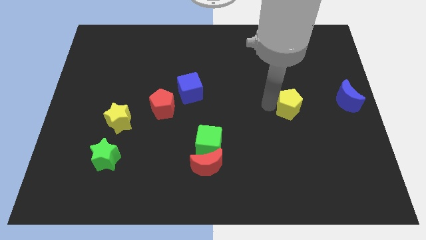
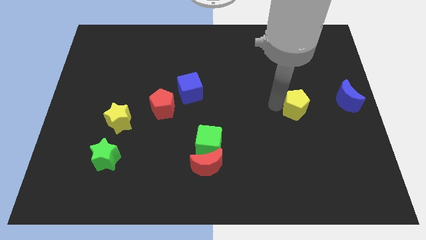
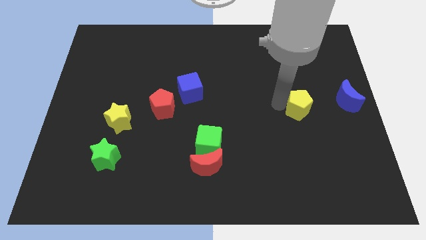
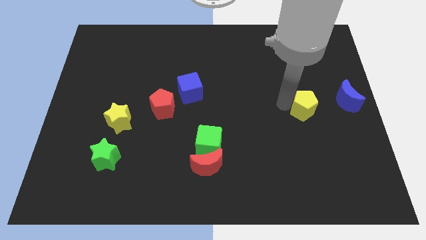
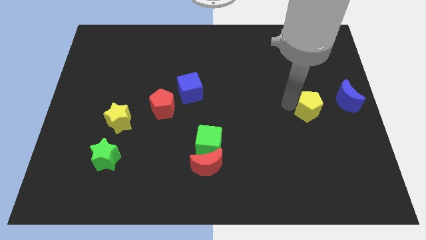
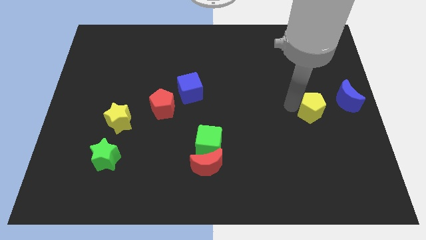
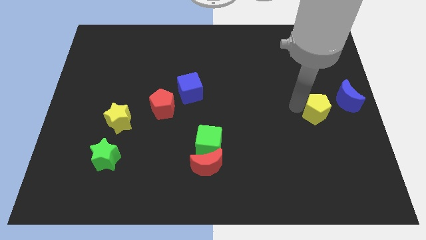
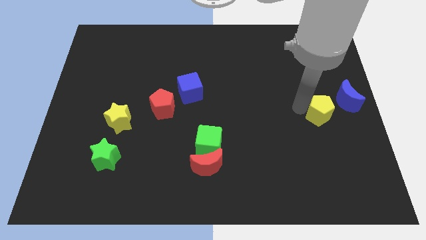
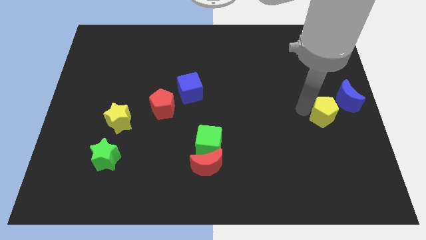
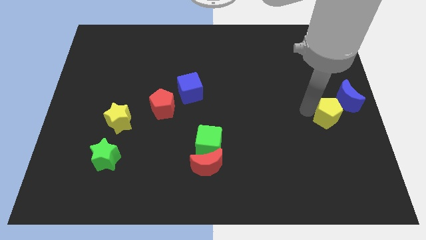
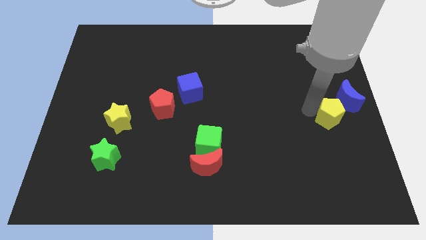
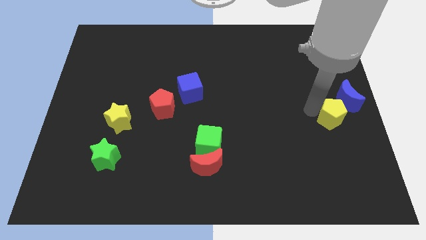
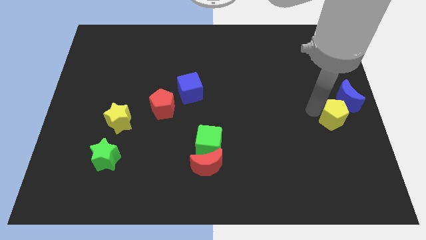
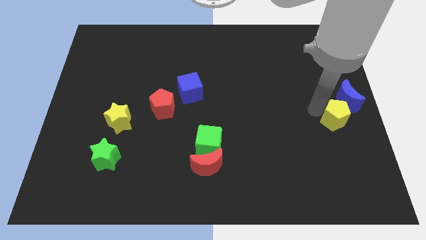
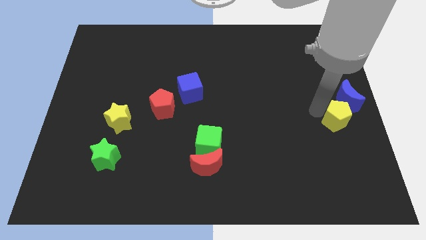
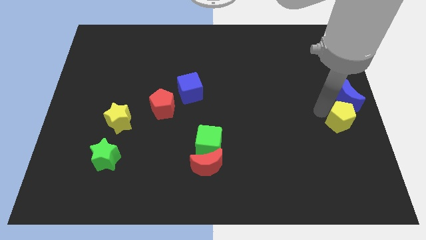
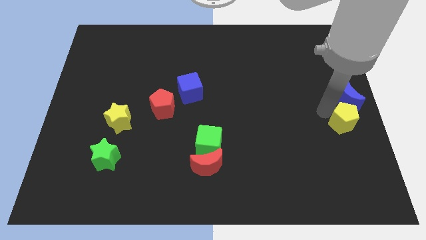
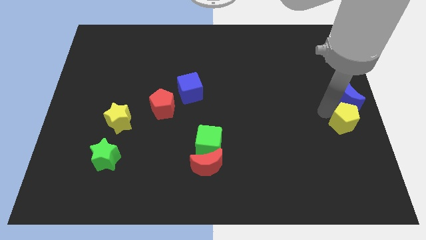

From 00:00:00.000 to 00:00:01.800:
place the yellow pentagon below the blue crescent

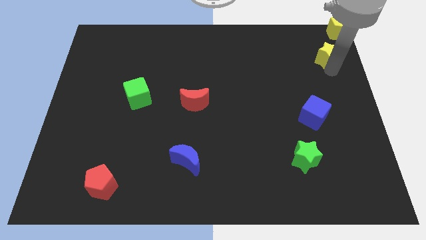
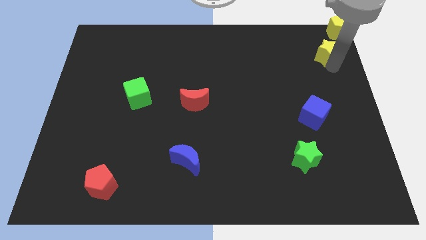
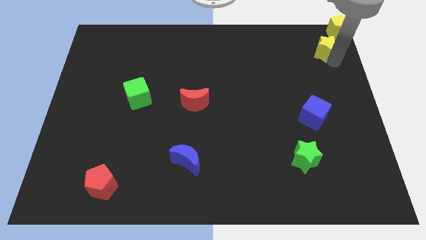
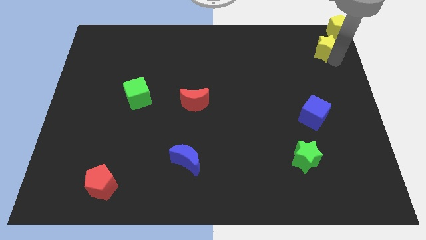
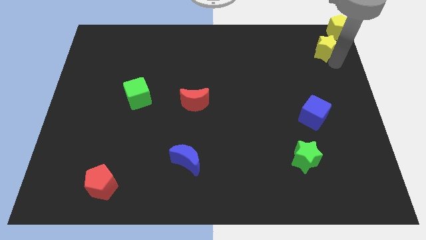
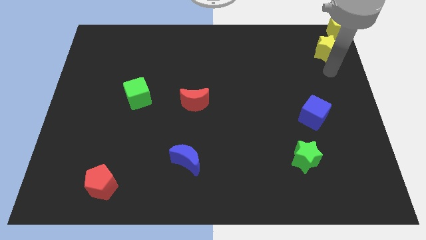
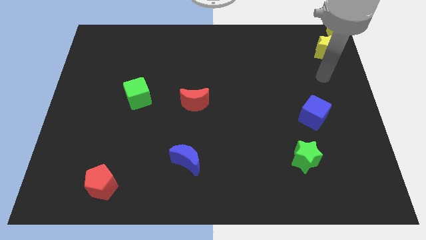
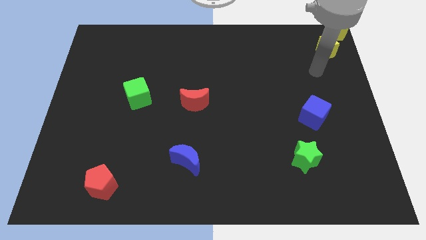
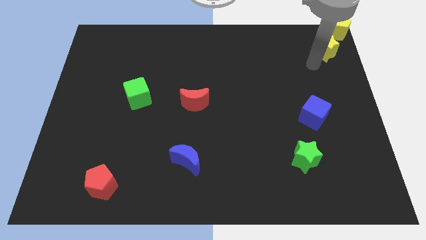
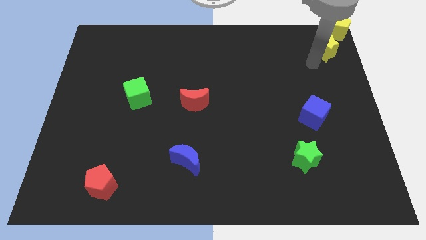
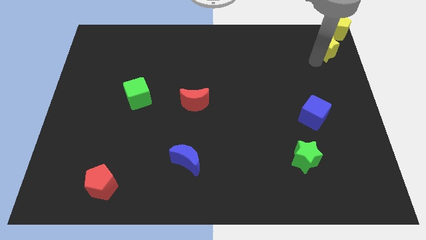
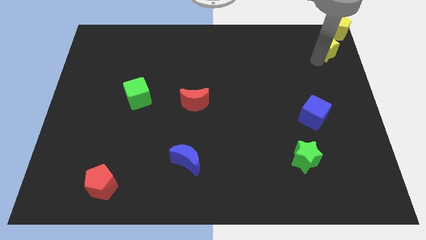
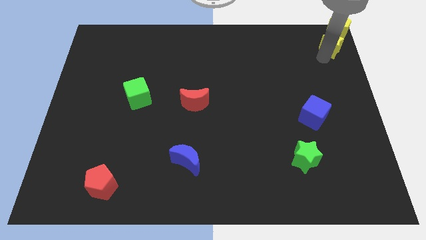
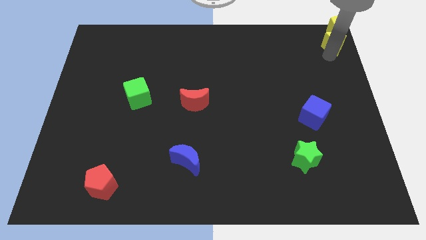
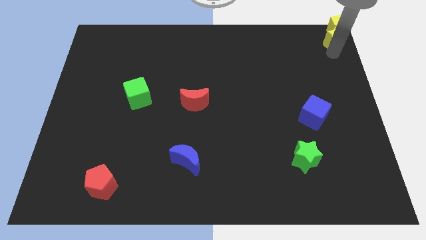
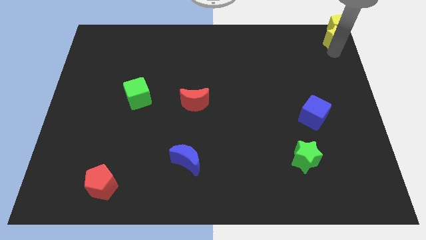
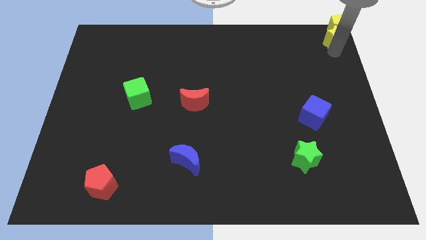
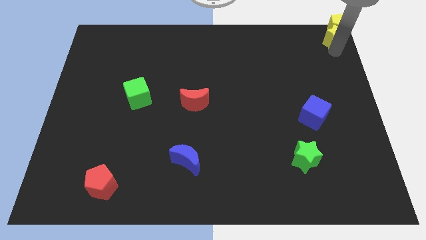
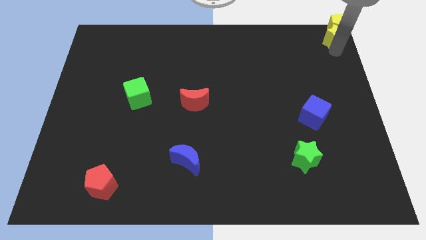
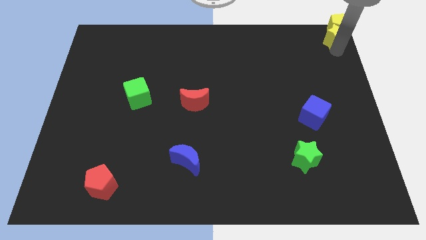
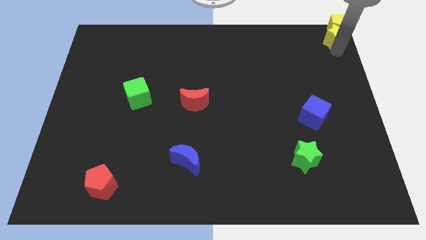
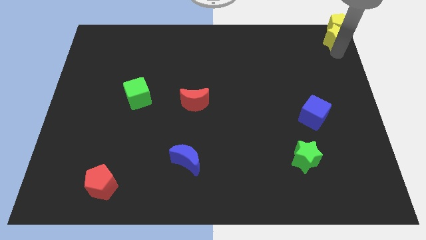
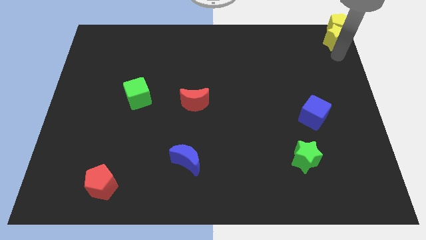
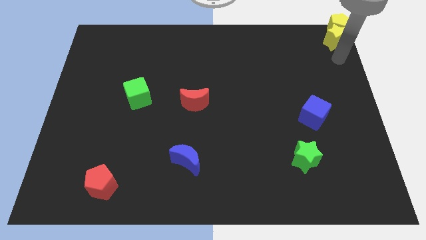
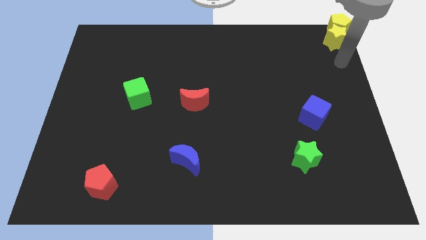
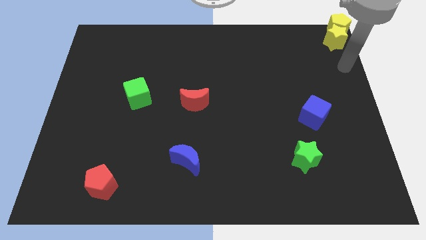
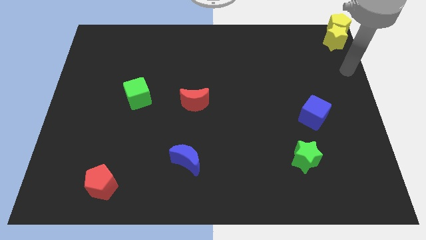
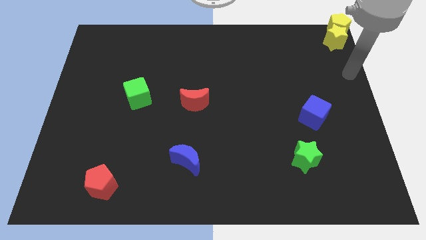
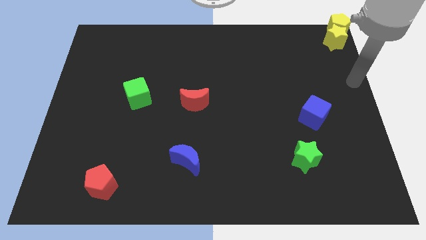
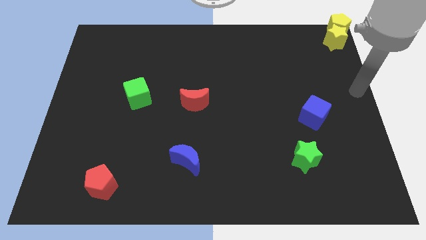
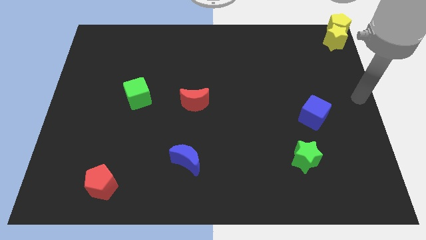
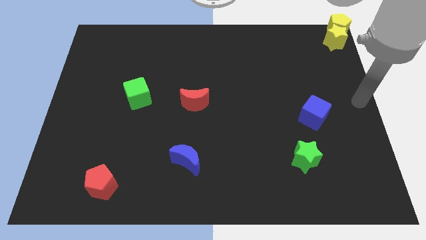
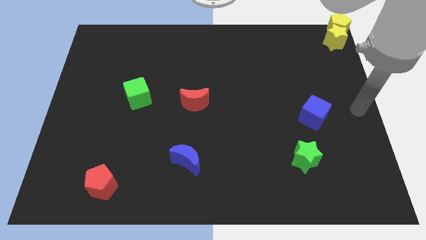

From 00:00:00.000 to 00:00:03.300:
push the yellow star into yellow pentagon

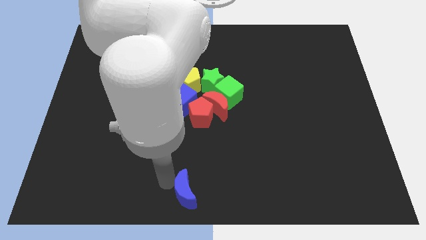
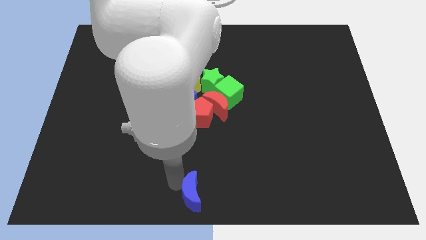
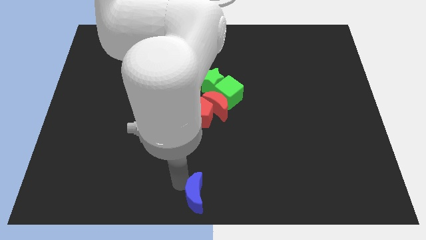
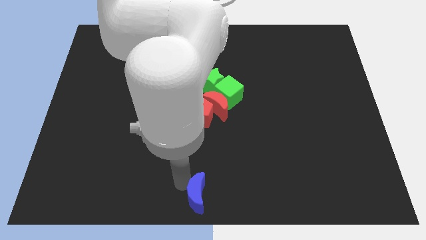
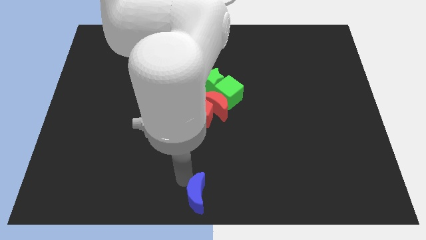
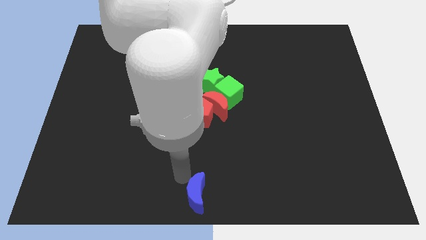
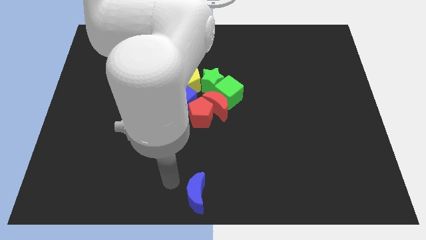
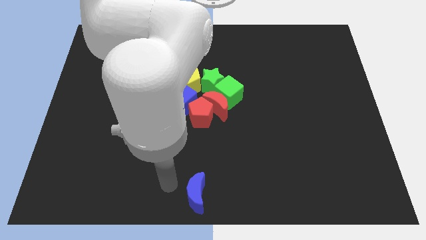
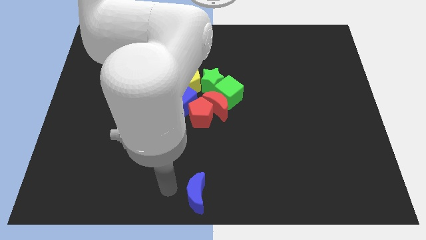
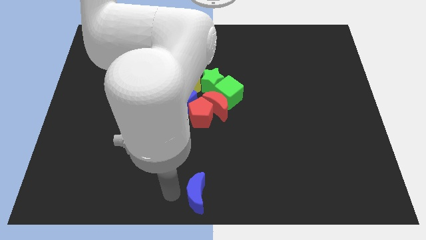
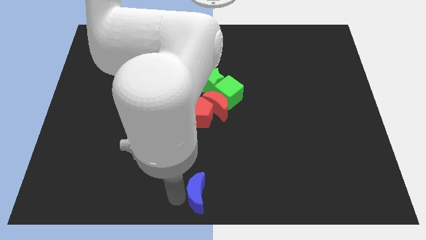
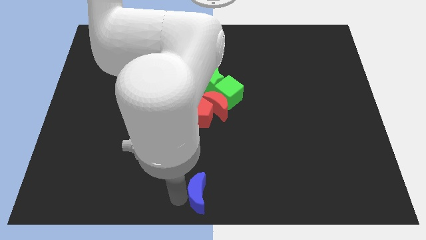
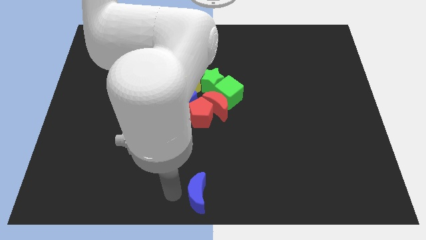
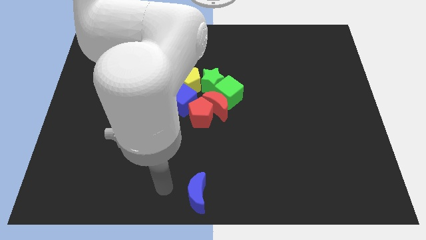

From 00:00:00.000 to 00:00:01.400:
push the blue crescent to the bottom center of the board

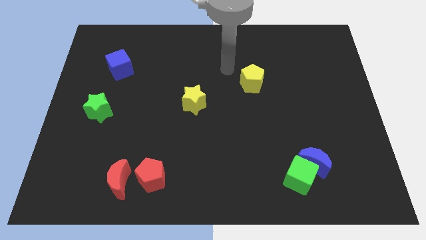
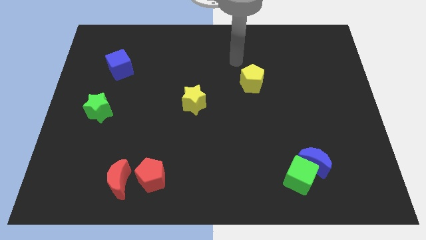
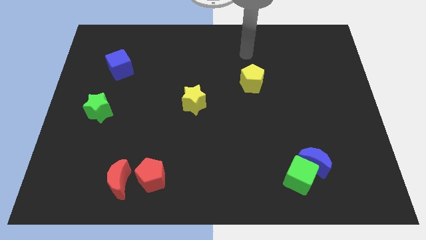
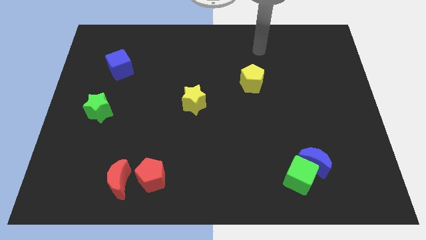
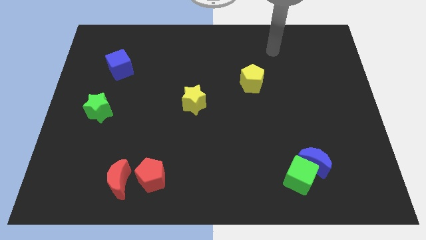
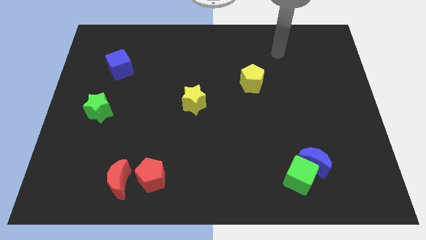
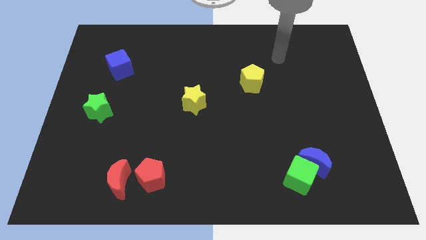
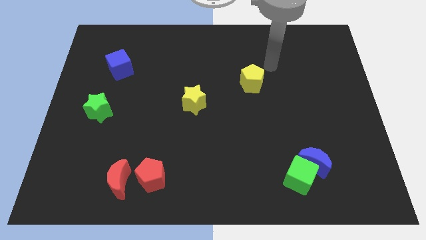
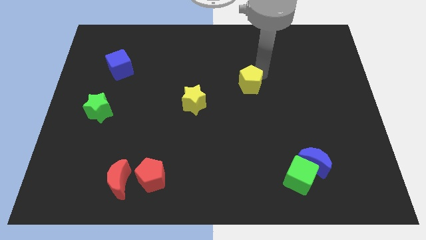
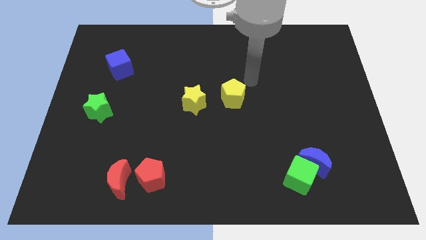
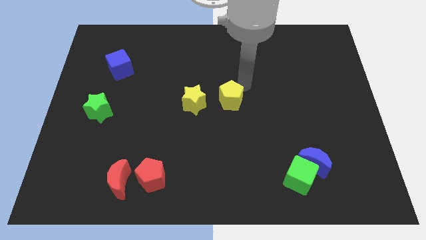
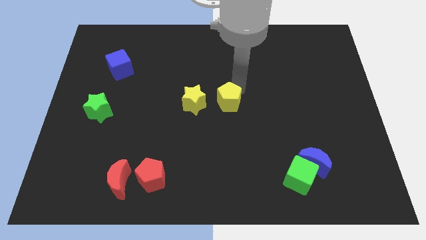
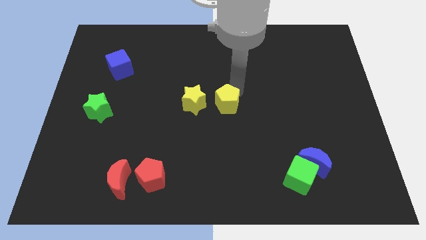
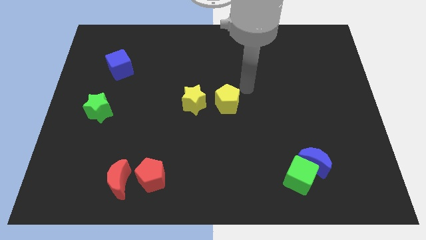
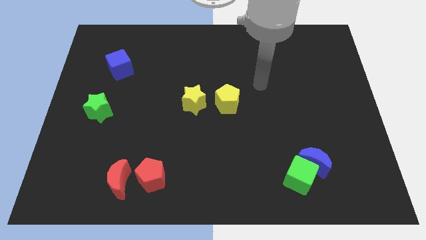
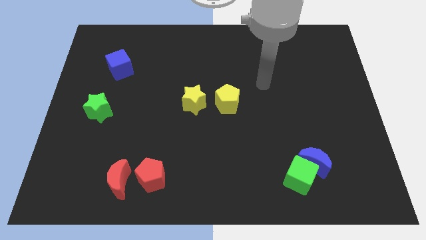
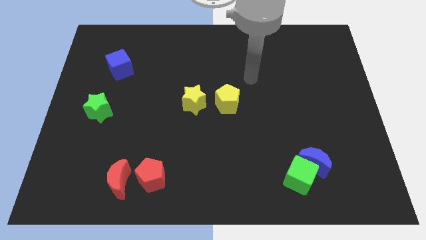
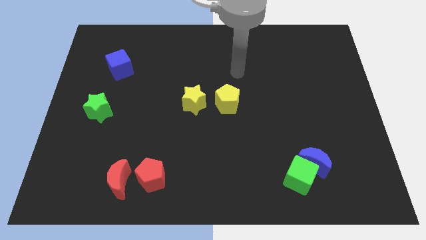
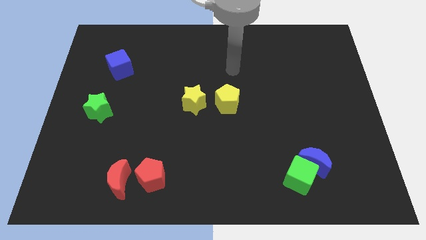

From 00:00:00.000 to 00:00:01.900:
move the yellow pentagon to the right of the yellow star

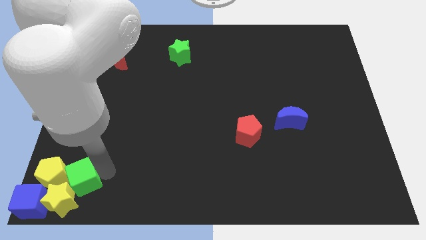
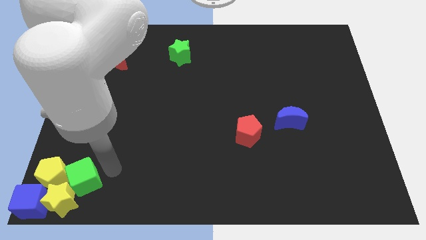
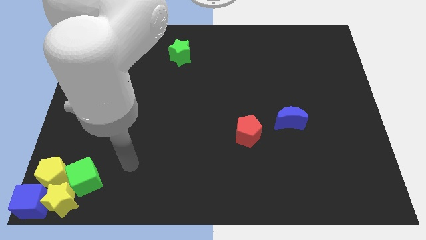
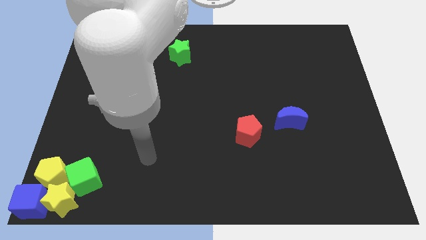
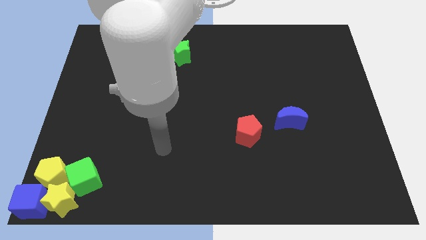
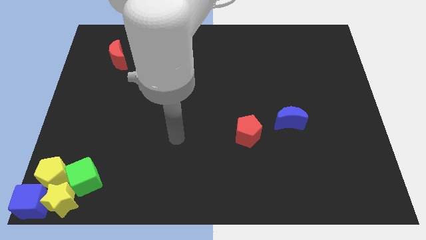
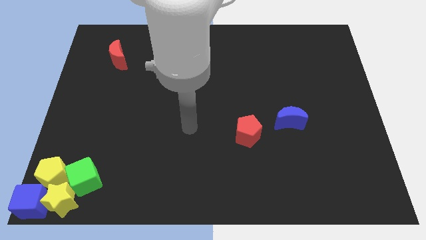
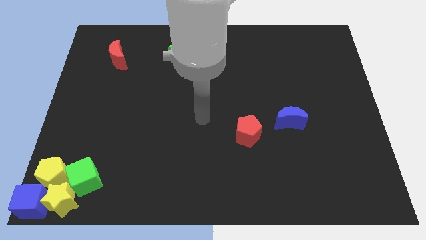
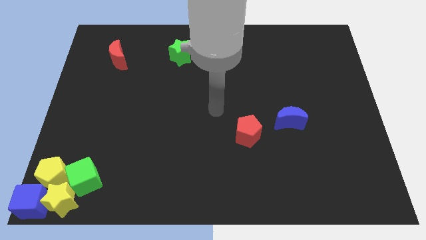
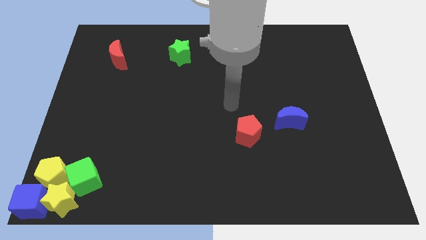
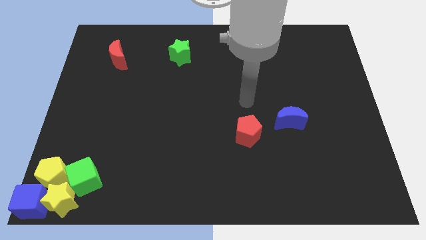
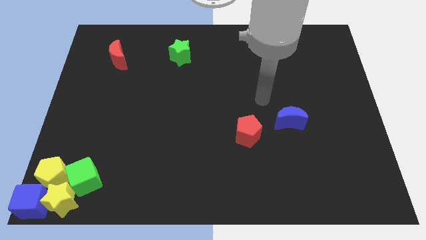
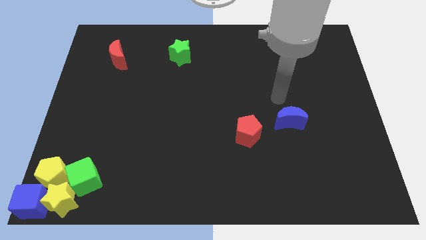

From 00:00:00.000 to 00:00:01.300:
move your arm away from green cube
